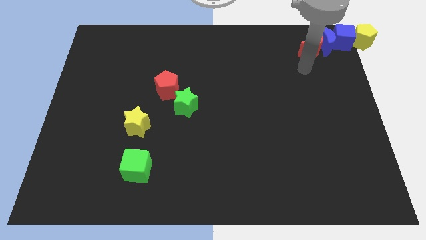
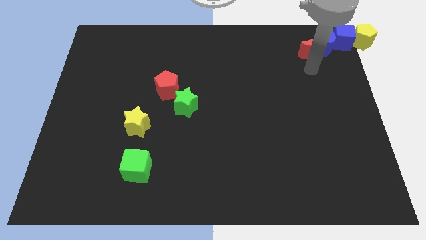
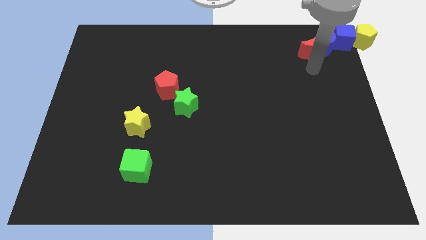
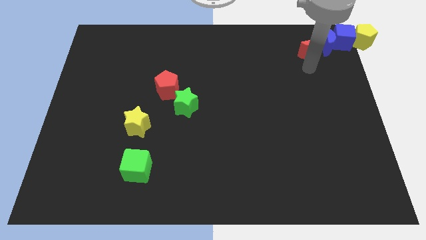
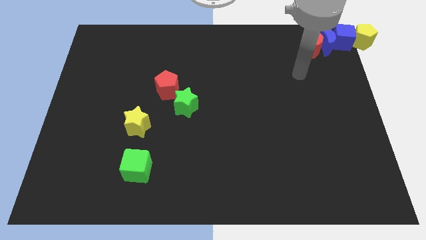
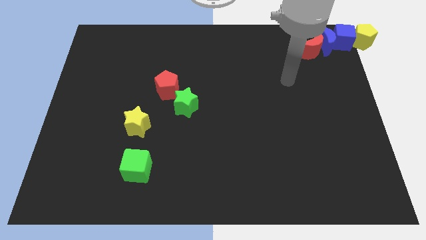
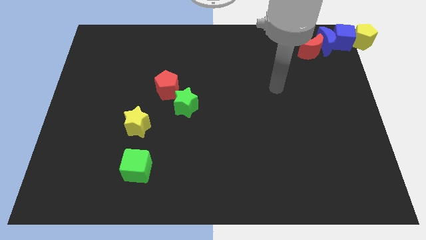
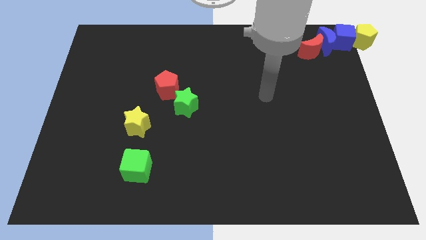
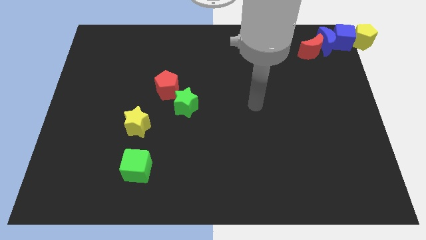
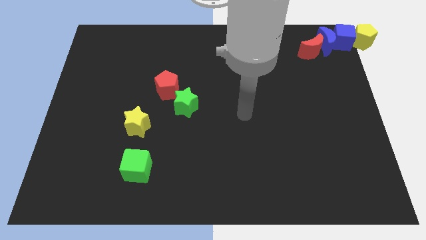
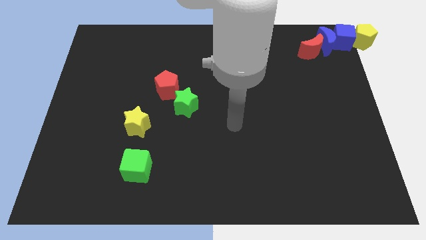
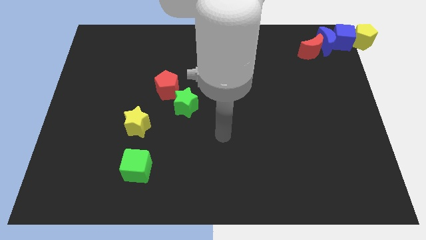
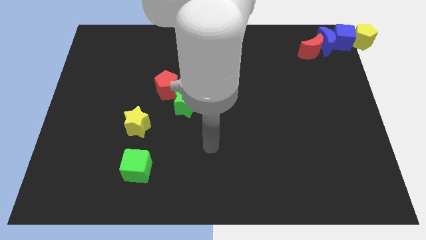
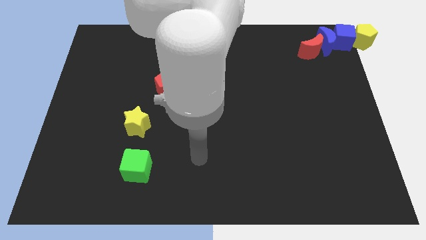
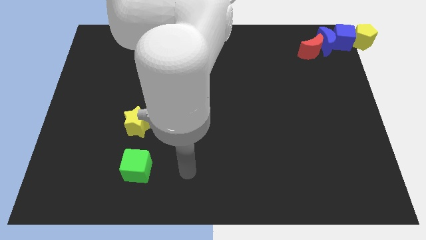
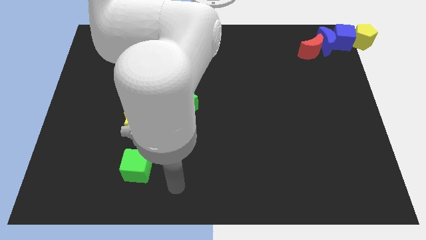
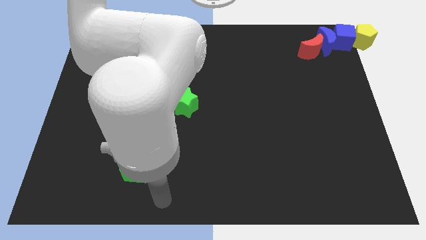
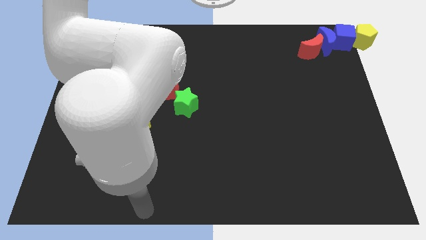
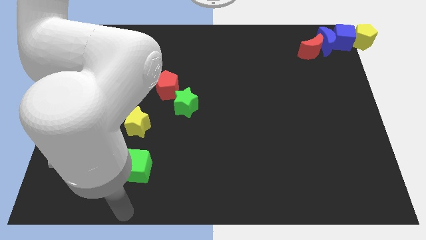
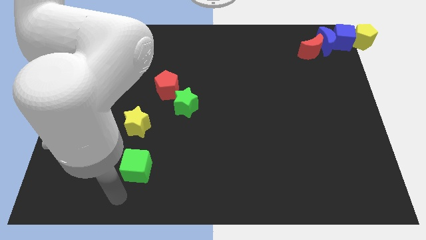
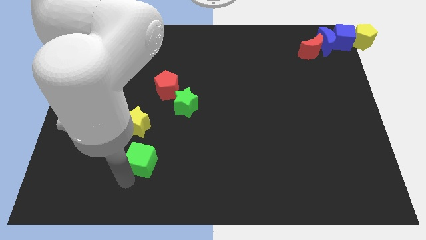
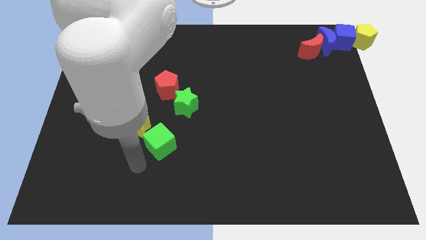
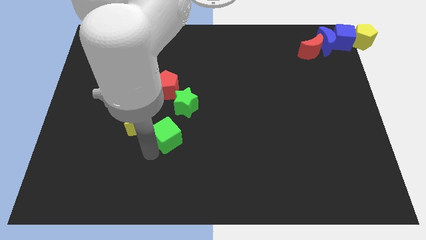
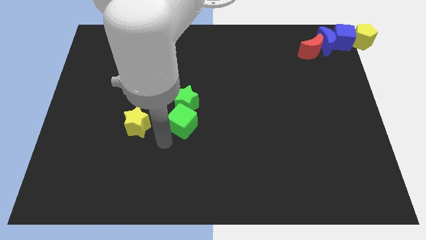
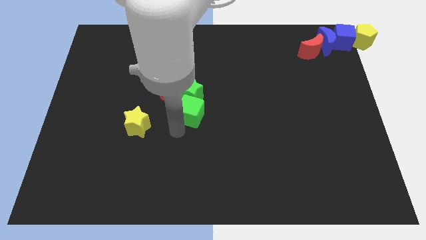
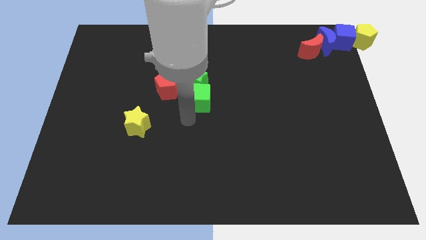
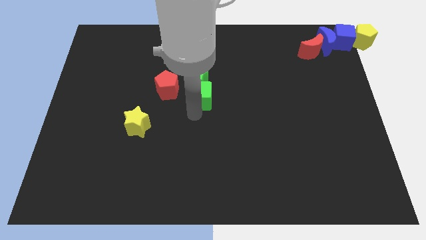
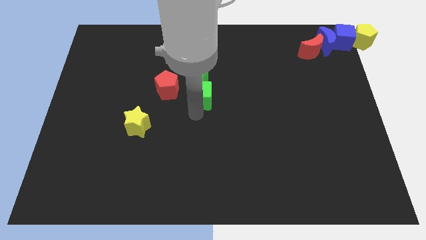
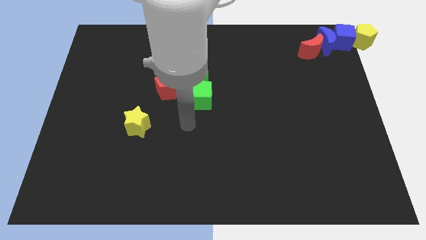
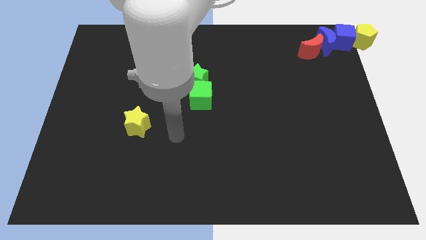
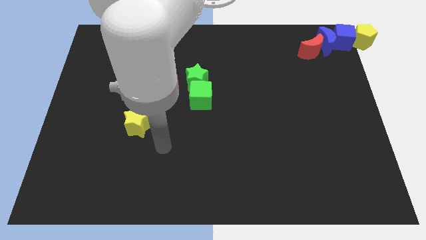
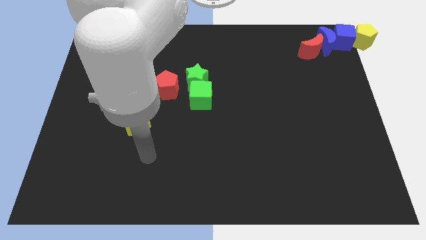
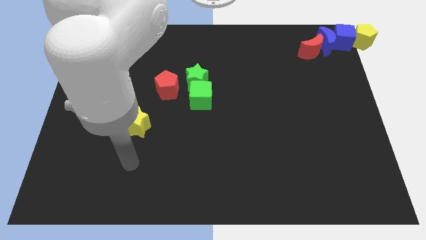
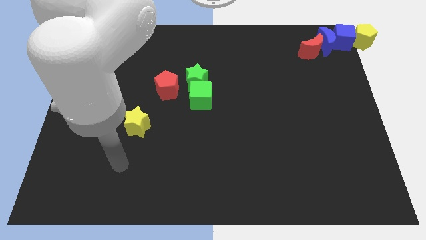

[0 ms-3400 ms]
move the green cube into the green star to the center

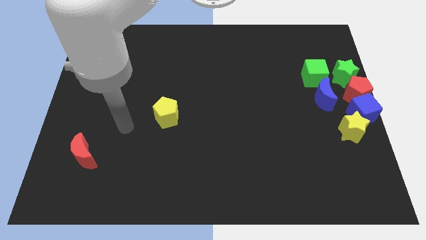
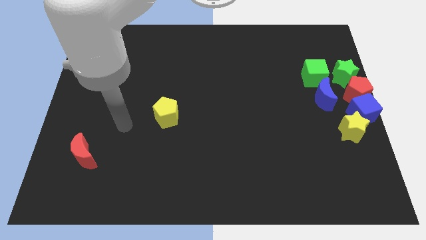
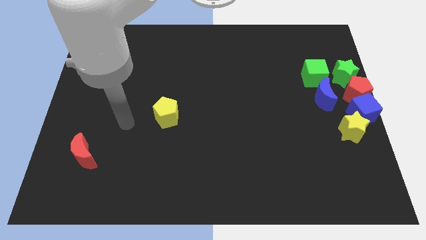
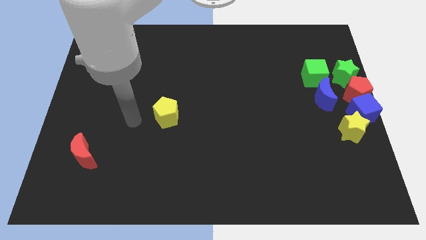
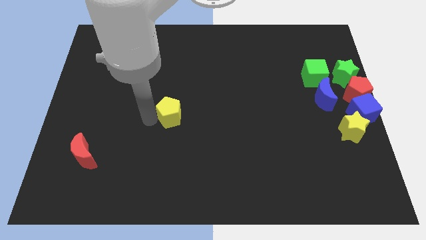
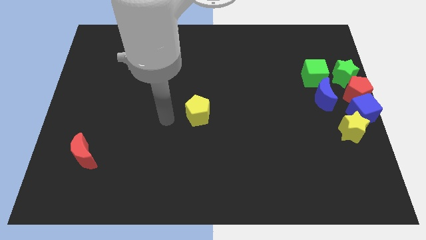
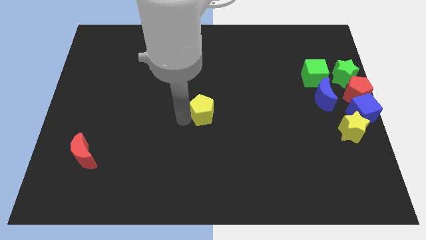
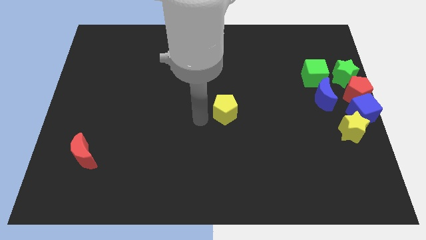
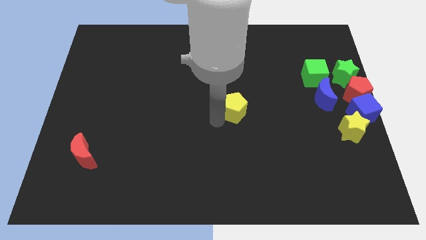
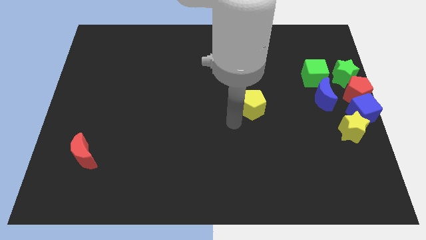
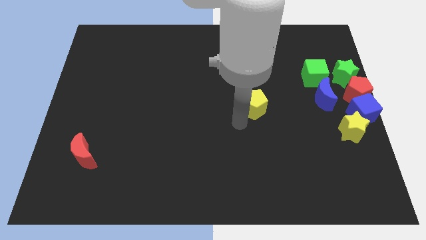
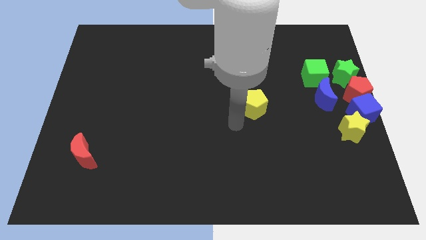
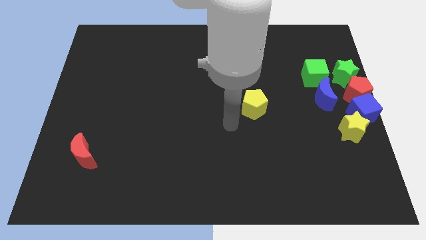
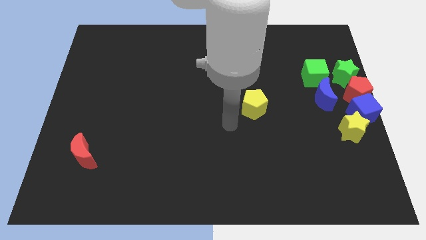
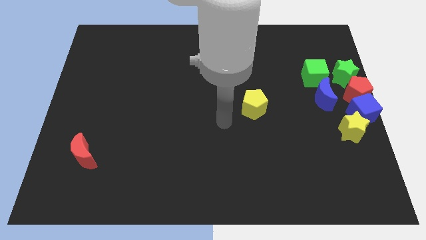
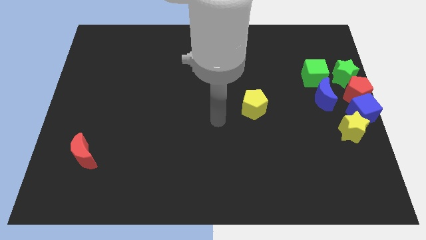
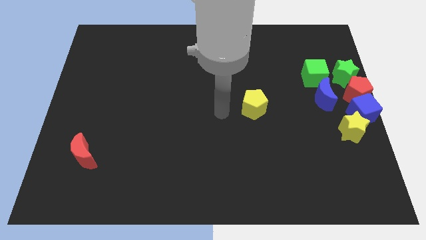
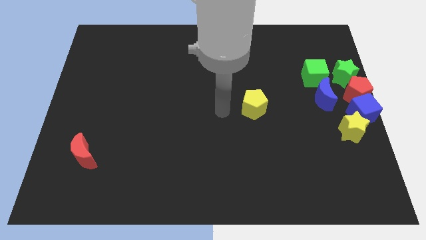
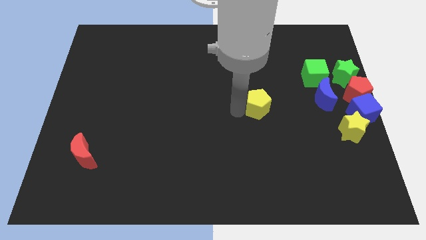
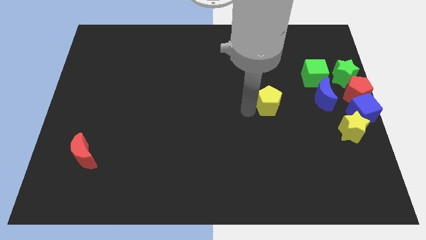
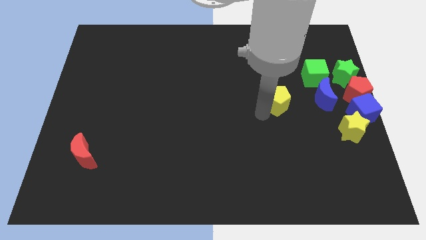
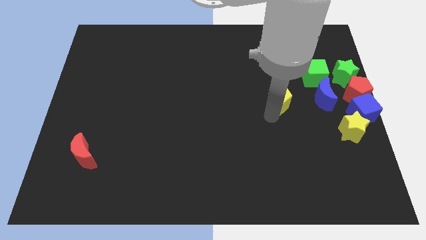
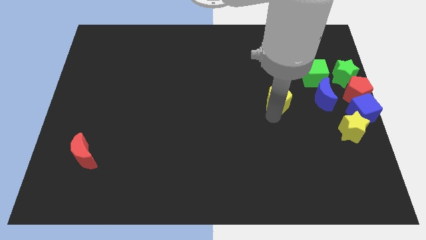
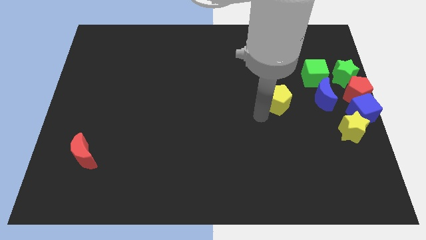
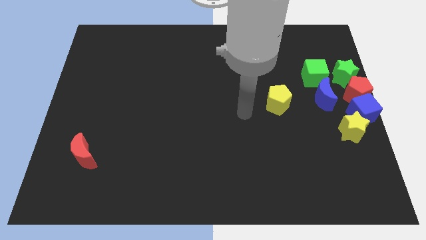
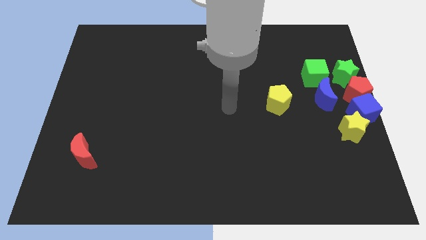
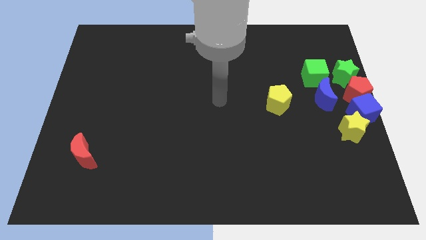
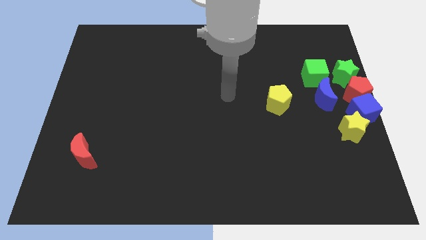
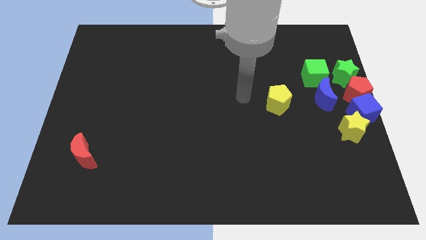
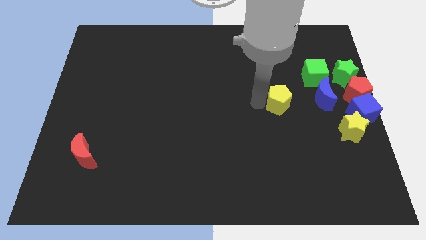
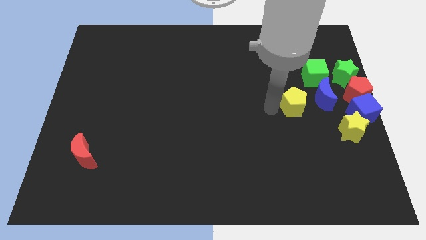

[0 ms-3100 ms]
move the yellow pentagon to the bottom left of the green cube

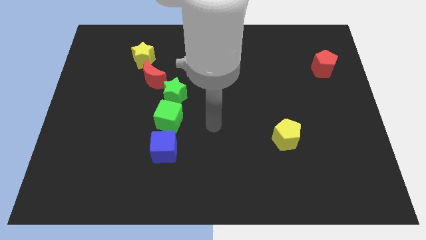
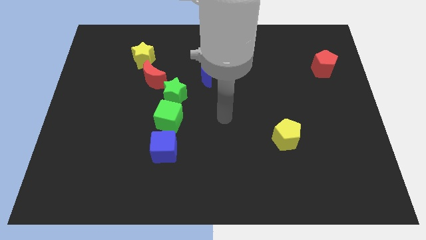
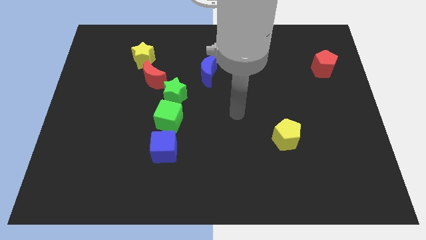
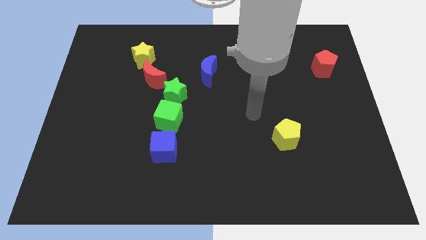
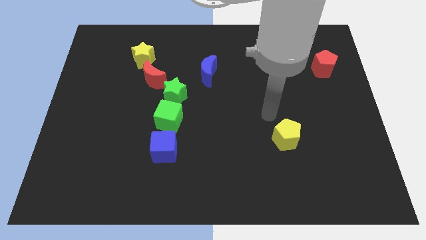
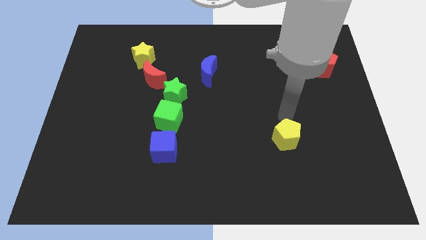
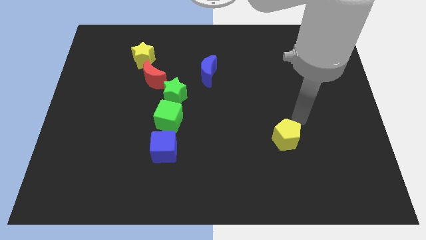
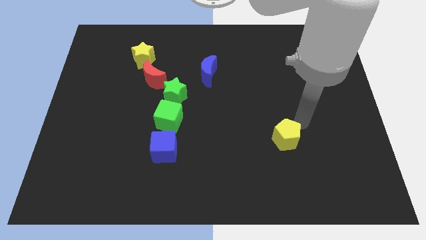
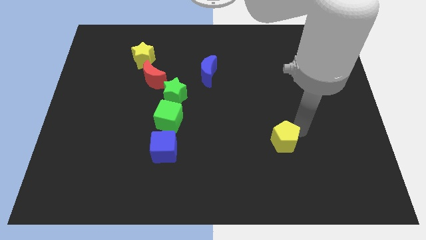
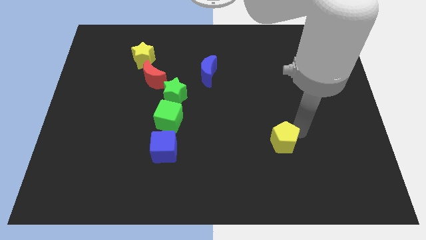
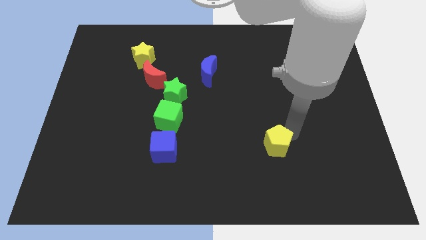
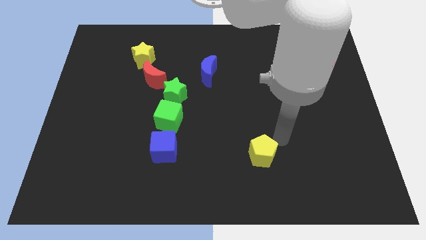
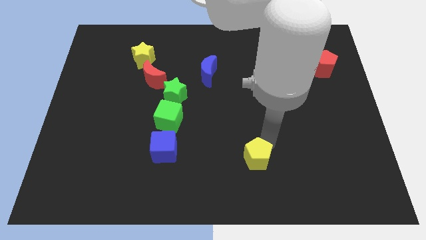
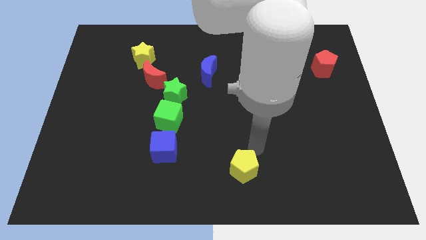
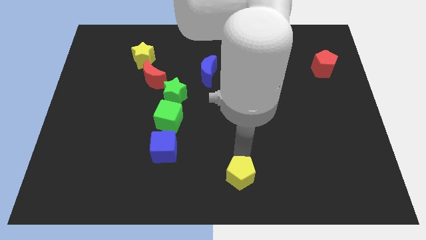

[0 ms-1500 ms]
drag the yellow pentagon to the bottom center of the board

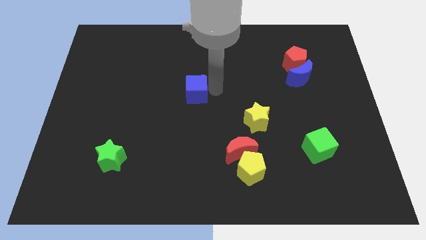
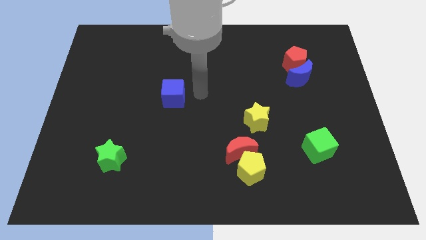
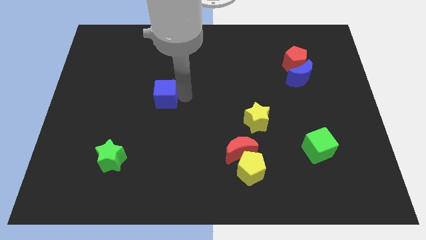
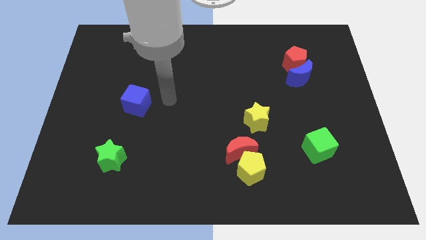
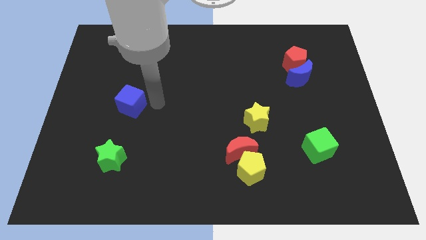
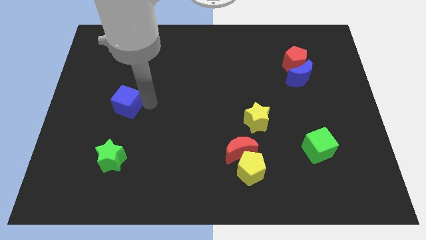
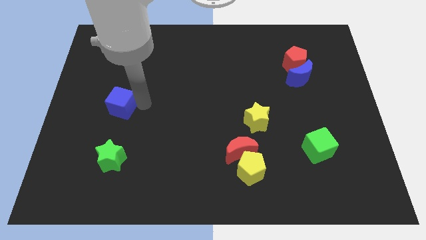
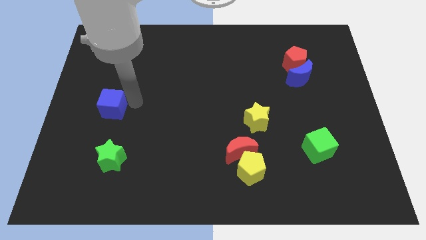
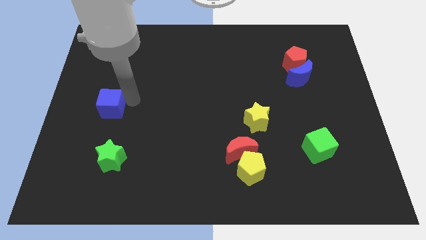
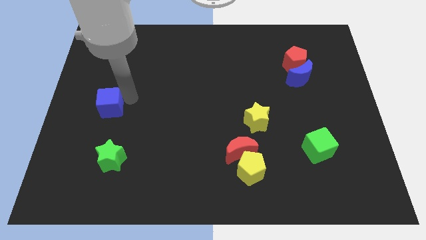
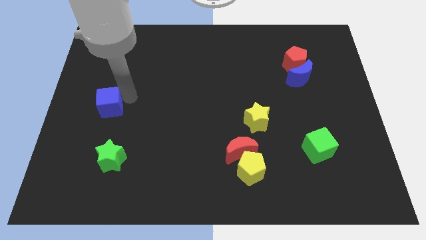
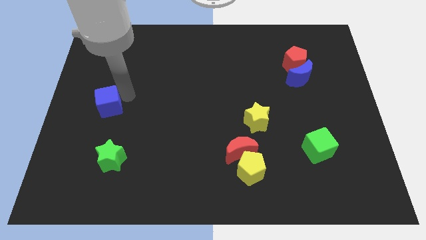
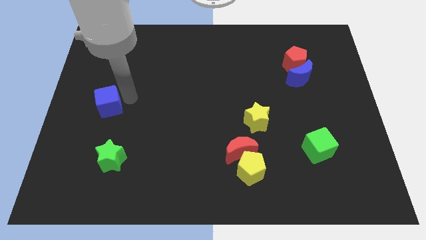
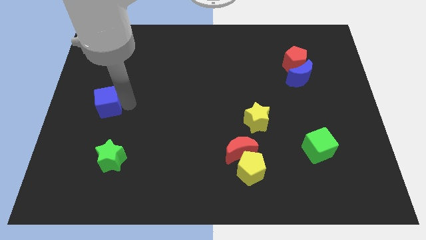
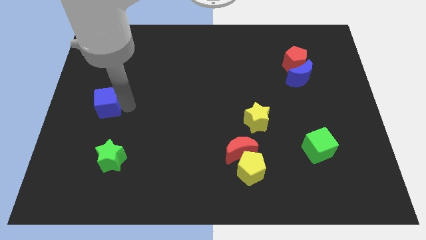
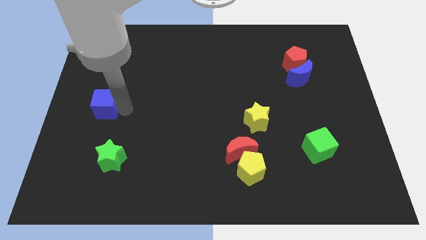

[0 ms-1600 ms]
push the blue cube towards the left side of the board
